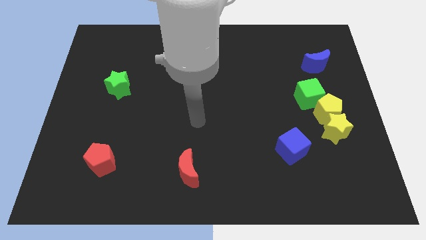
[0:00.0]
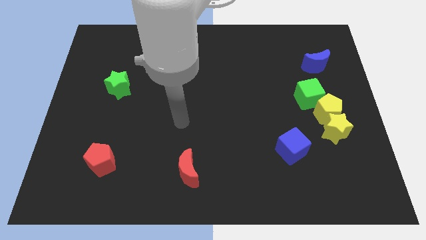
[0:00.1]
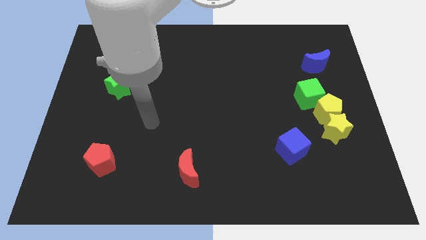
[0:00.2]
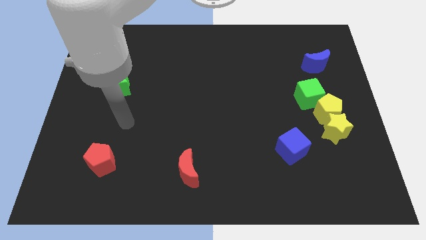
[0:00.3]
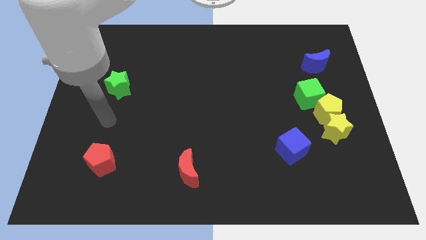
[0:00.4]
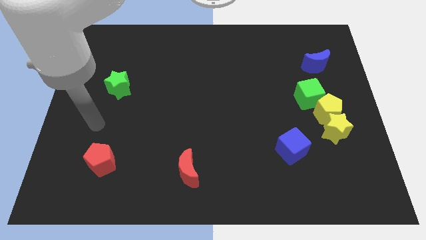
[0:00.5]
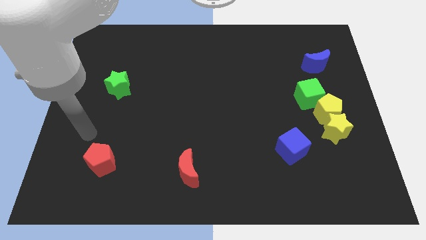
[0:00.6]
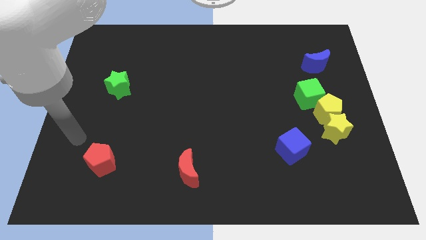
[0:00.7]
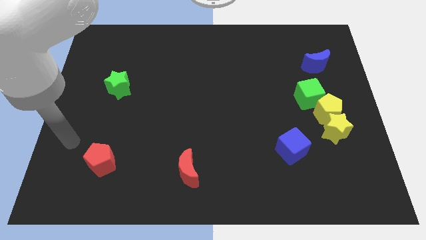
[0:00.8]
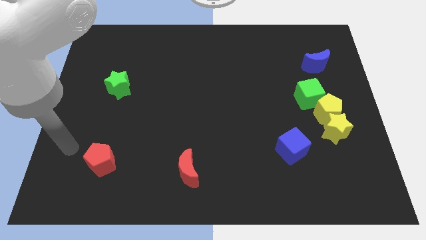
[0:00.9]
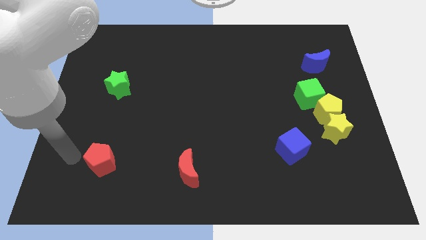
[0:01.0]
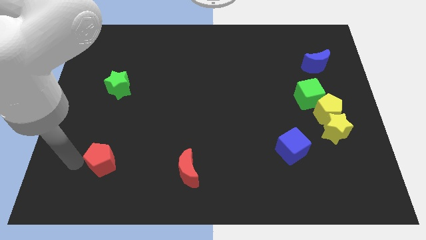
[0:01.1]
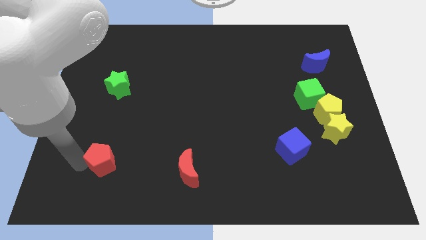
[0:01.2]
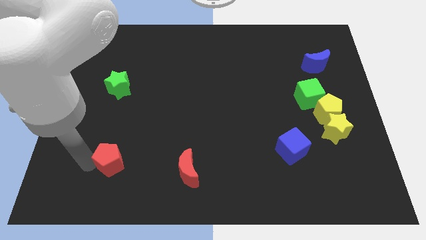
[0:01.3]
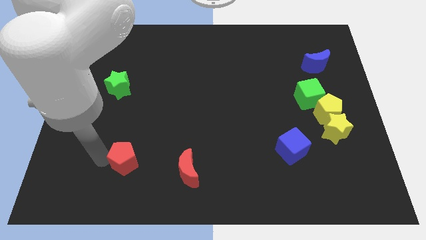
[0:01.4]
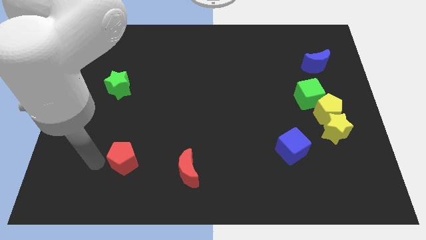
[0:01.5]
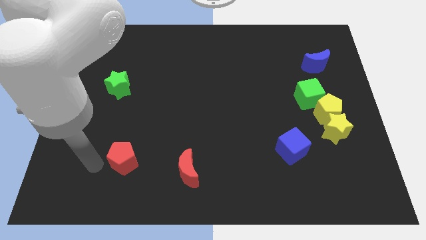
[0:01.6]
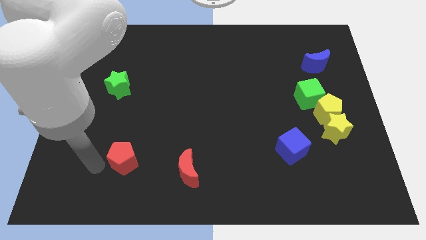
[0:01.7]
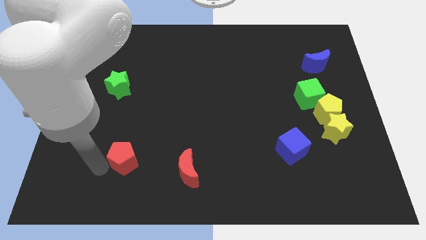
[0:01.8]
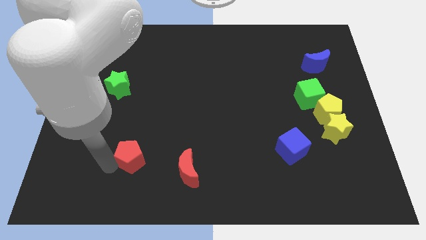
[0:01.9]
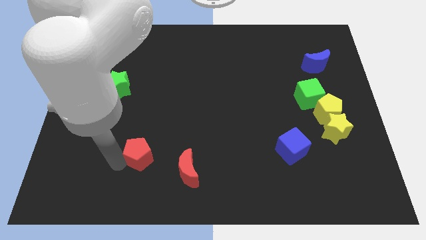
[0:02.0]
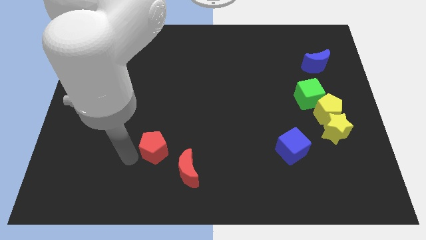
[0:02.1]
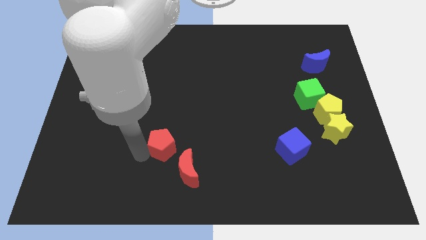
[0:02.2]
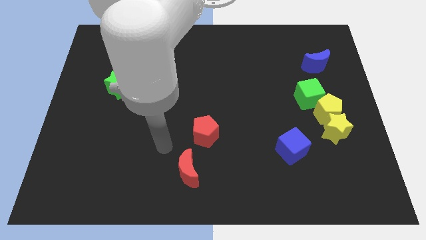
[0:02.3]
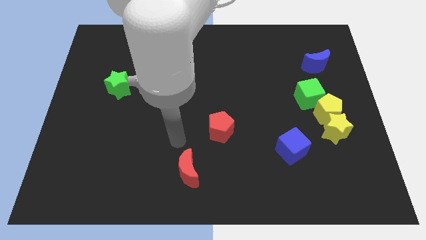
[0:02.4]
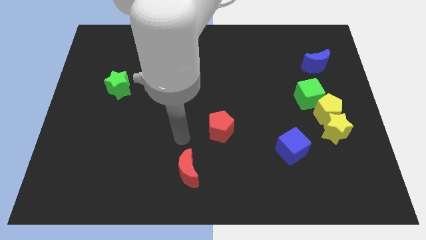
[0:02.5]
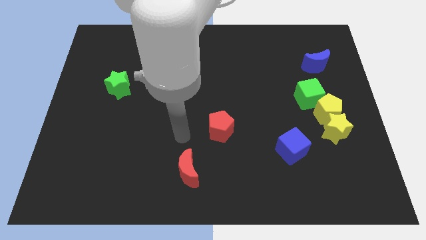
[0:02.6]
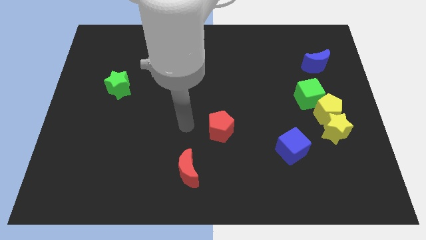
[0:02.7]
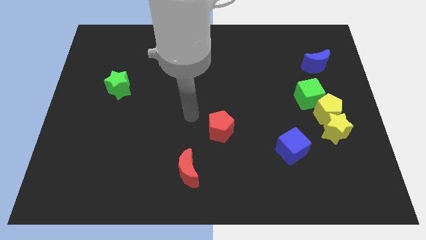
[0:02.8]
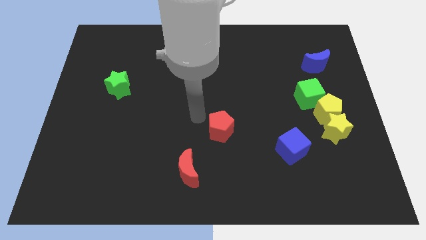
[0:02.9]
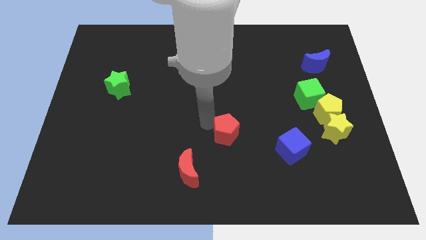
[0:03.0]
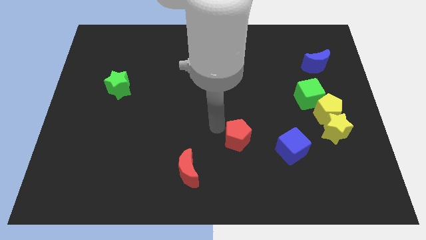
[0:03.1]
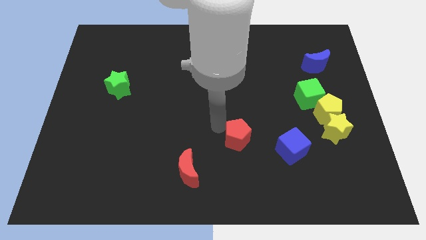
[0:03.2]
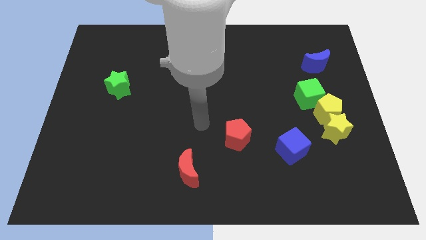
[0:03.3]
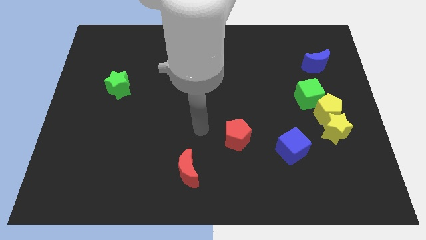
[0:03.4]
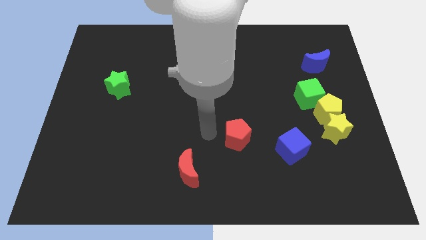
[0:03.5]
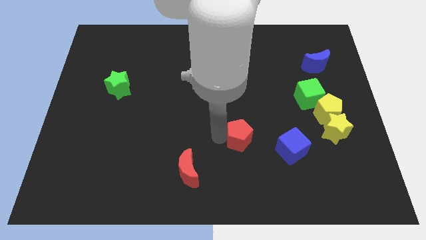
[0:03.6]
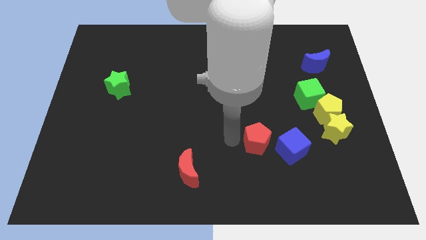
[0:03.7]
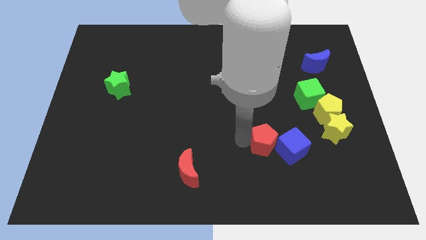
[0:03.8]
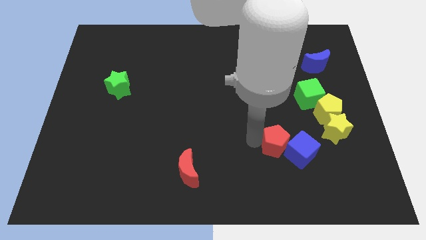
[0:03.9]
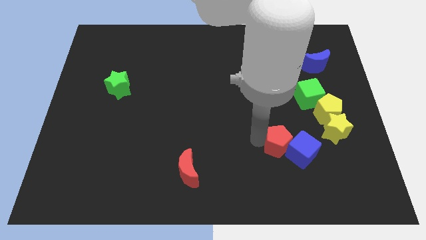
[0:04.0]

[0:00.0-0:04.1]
push the red pentagon towards the blue cube

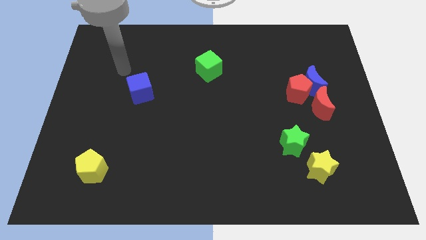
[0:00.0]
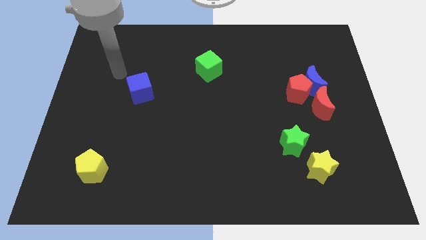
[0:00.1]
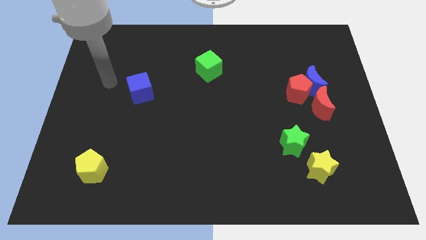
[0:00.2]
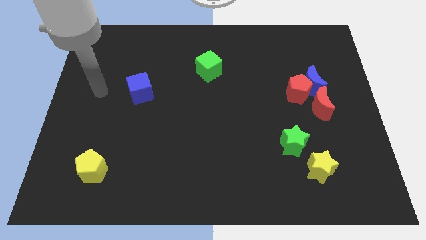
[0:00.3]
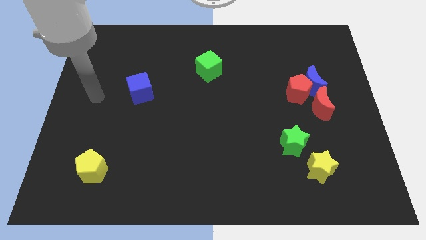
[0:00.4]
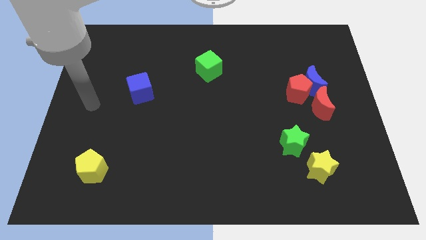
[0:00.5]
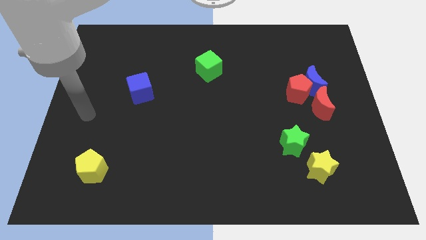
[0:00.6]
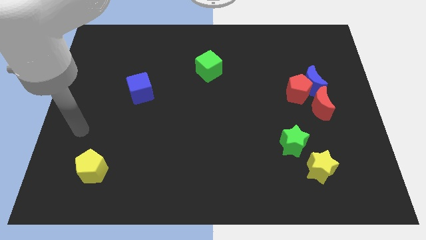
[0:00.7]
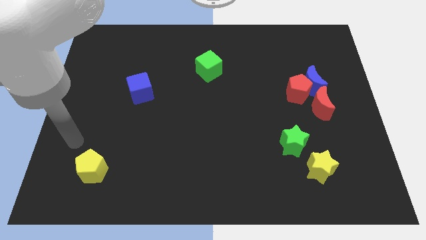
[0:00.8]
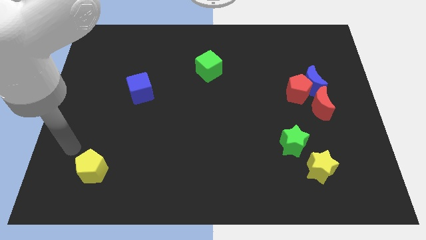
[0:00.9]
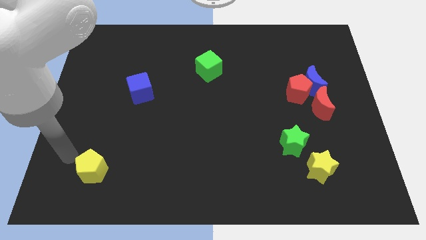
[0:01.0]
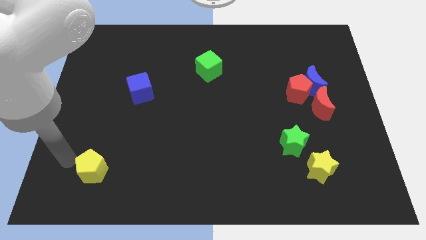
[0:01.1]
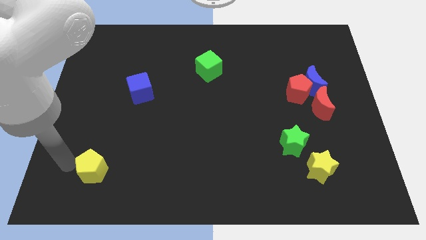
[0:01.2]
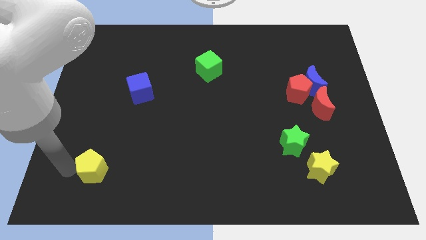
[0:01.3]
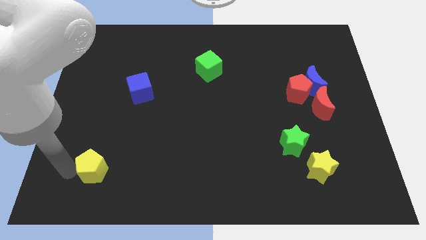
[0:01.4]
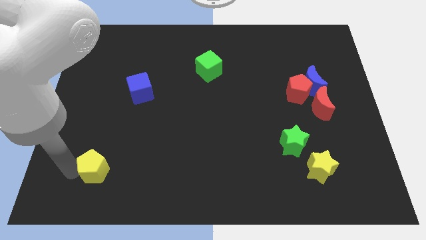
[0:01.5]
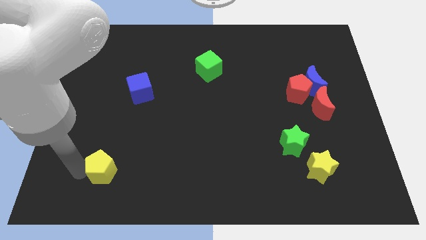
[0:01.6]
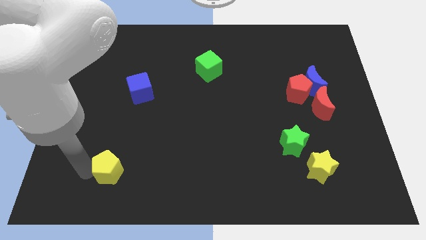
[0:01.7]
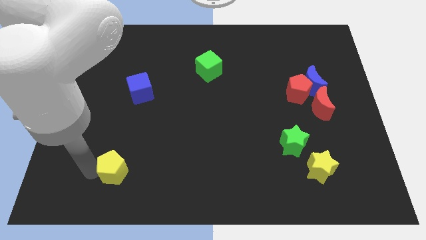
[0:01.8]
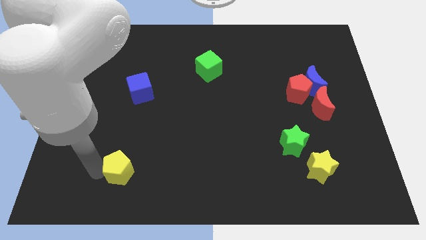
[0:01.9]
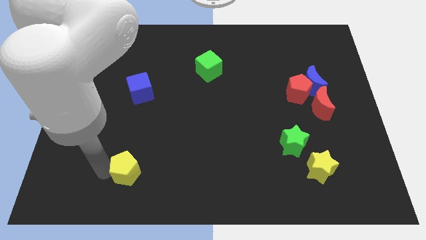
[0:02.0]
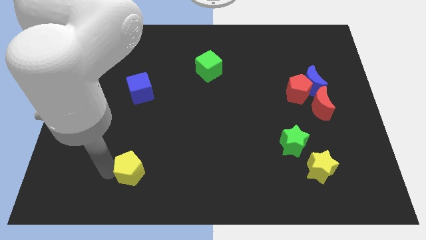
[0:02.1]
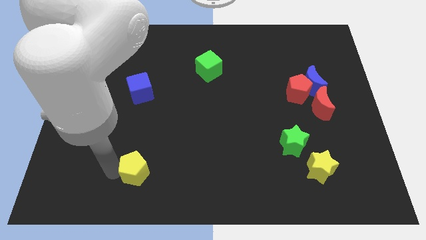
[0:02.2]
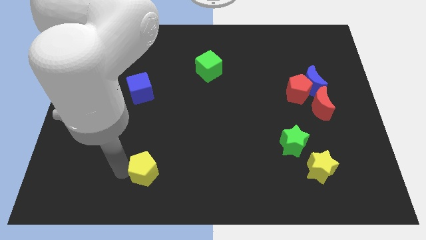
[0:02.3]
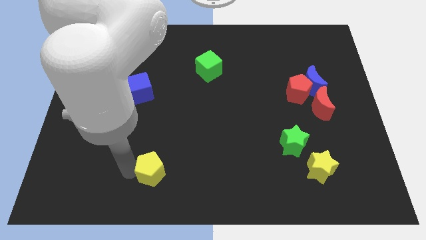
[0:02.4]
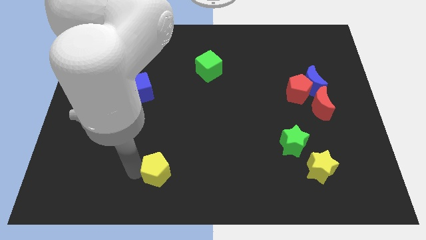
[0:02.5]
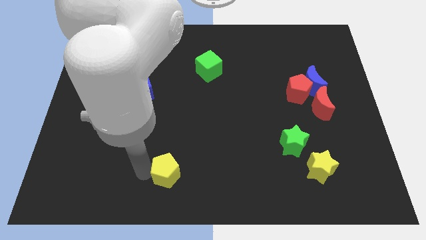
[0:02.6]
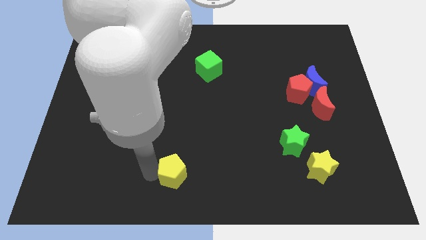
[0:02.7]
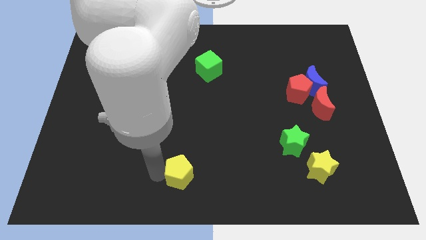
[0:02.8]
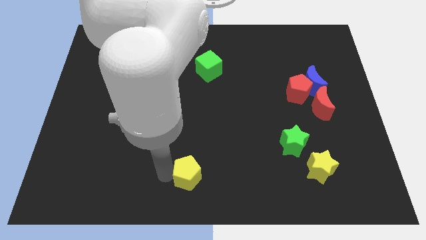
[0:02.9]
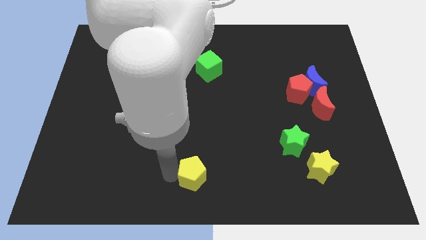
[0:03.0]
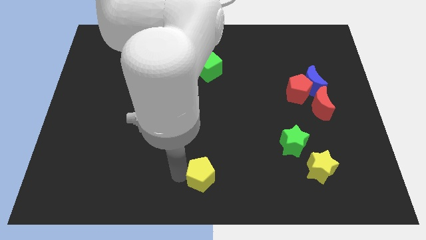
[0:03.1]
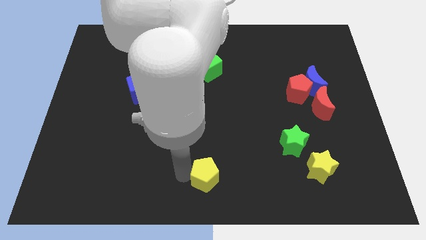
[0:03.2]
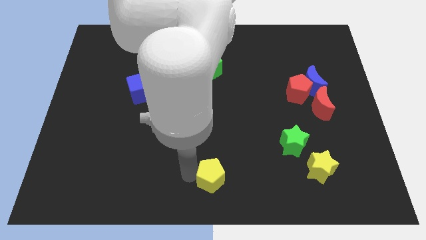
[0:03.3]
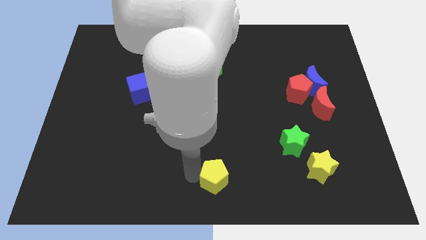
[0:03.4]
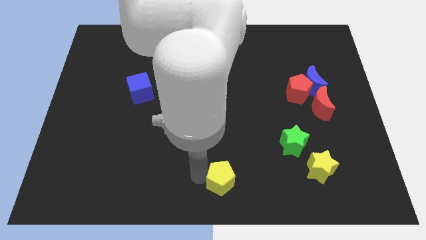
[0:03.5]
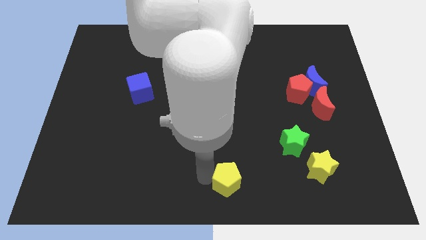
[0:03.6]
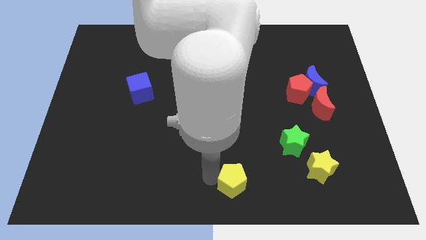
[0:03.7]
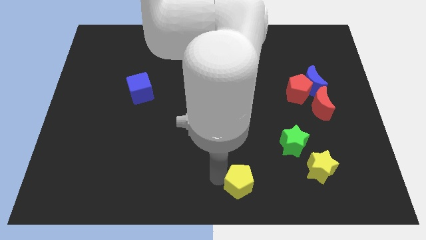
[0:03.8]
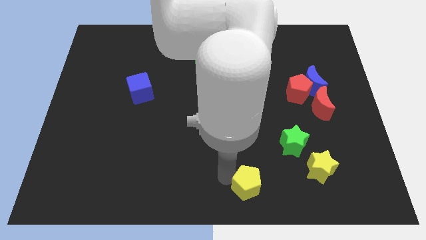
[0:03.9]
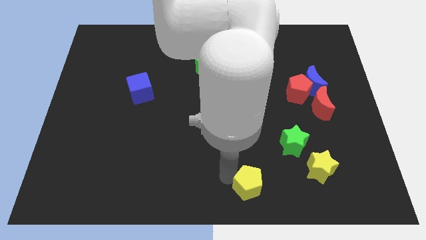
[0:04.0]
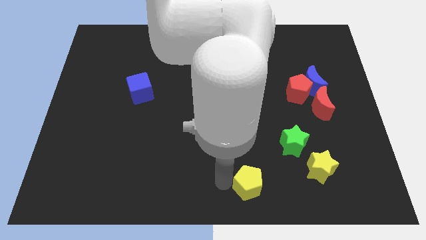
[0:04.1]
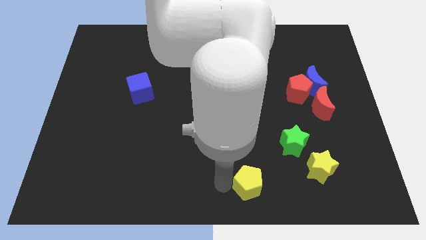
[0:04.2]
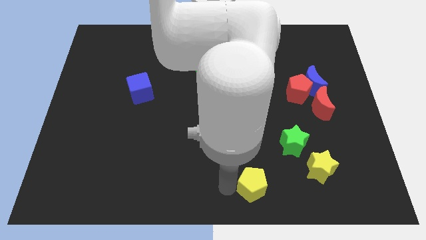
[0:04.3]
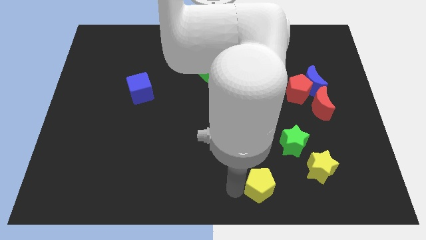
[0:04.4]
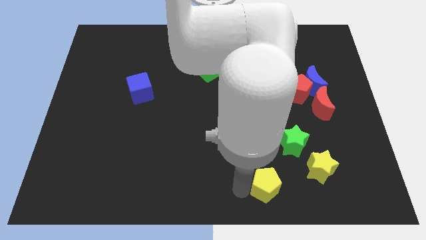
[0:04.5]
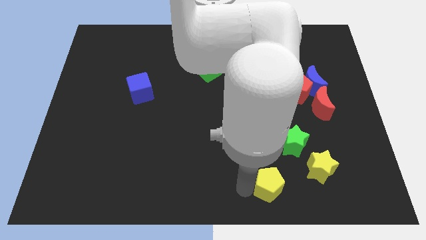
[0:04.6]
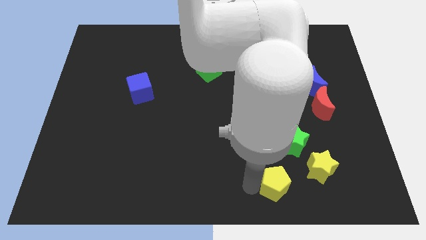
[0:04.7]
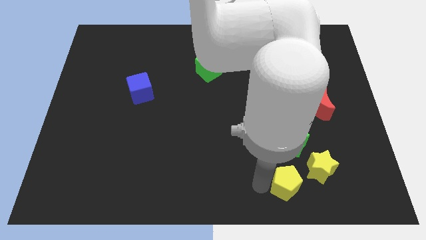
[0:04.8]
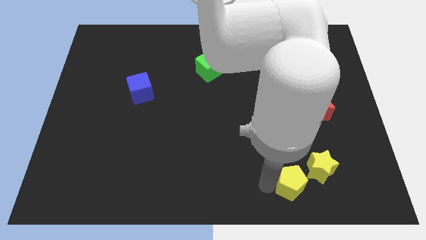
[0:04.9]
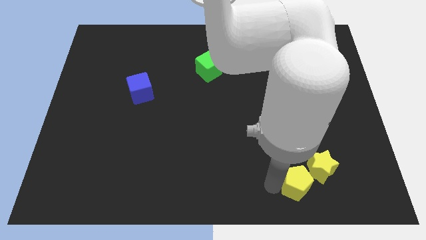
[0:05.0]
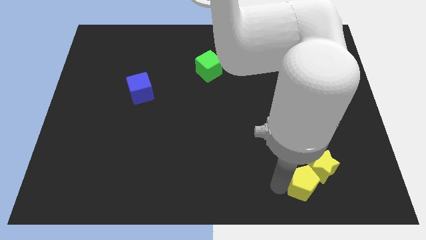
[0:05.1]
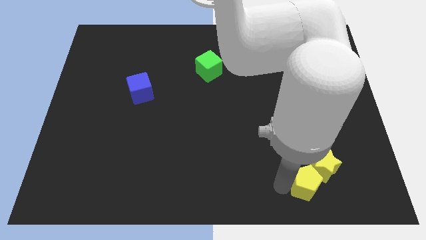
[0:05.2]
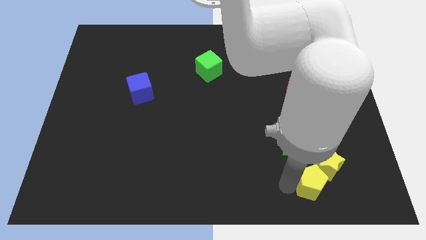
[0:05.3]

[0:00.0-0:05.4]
put the yellow pentagon to the yellow star
